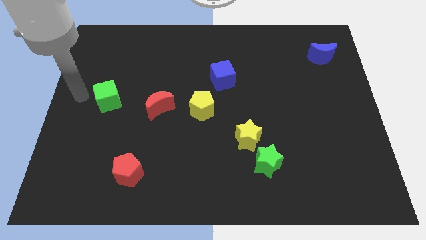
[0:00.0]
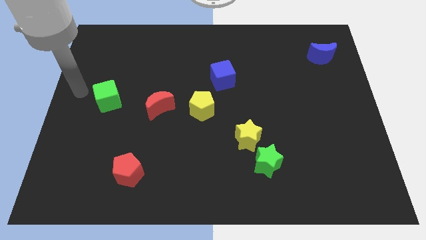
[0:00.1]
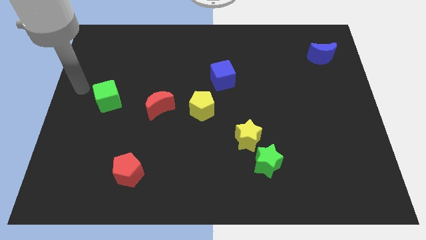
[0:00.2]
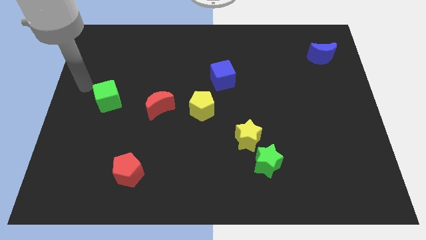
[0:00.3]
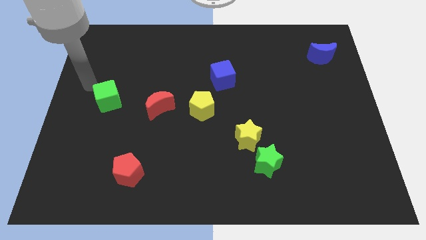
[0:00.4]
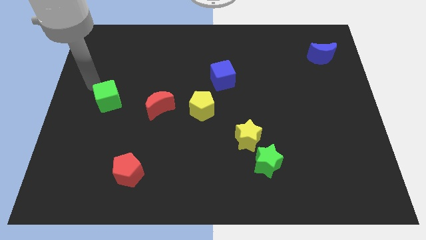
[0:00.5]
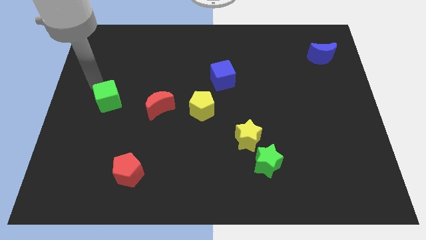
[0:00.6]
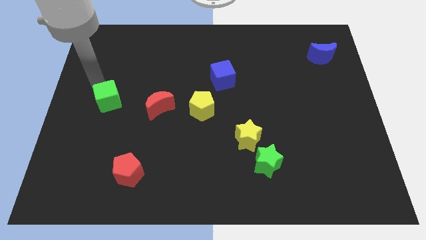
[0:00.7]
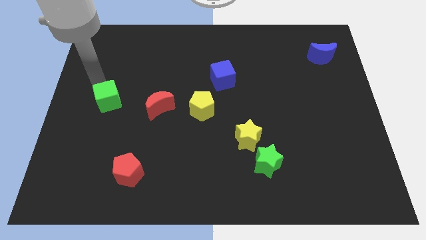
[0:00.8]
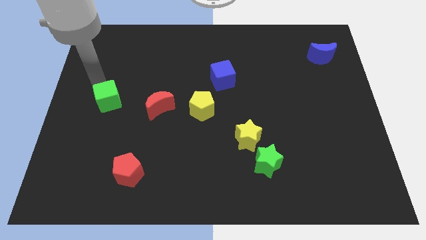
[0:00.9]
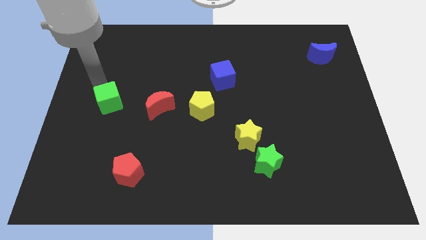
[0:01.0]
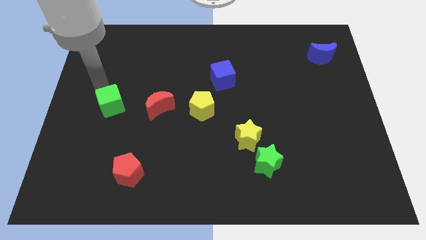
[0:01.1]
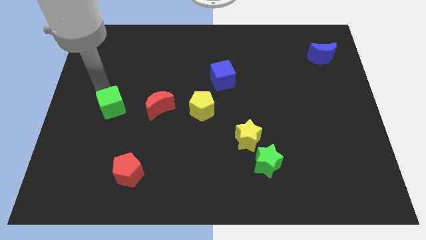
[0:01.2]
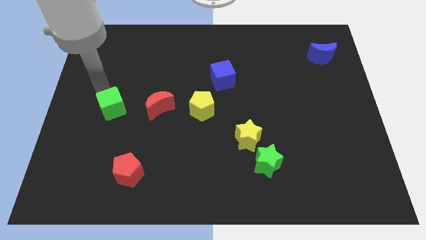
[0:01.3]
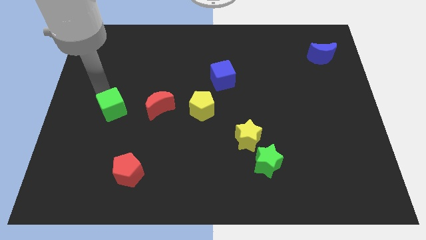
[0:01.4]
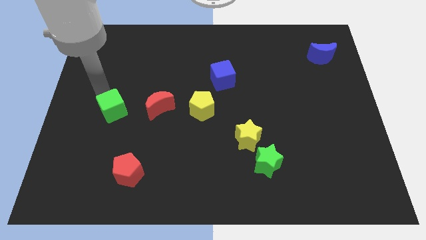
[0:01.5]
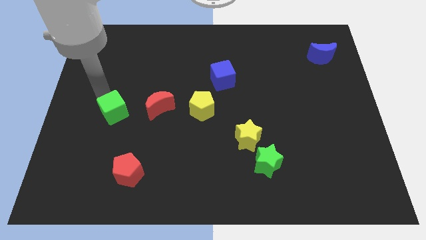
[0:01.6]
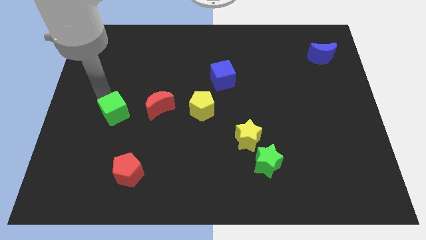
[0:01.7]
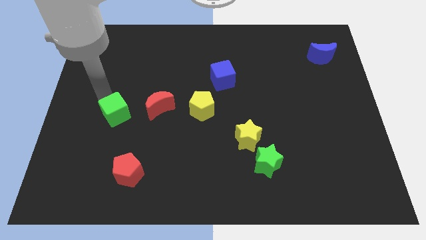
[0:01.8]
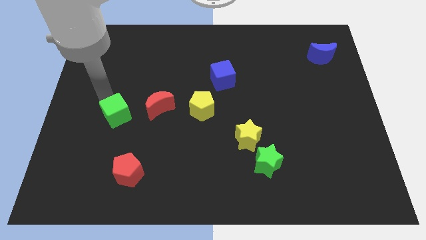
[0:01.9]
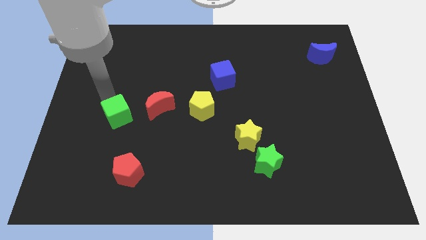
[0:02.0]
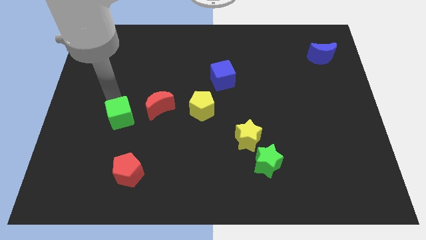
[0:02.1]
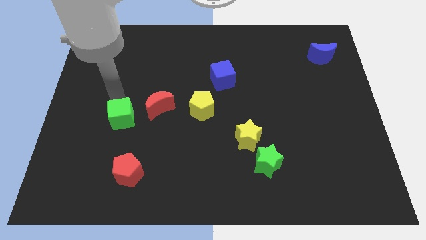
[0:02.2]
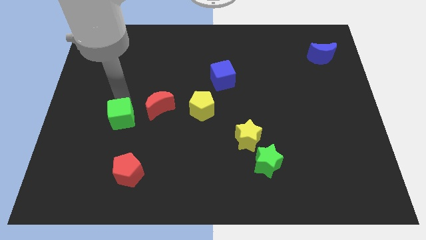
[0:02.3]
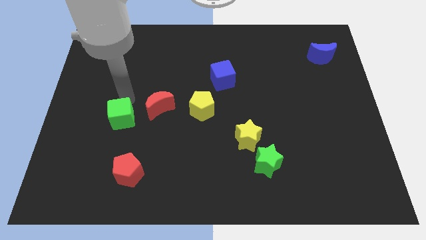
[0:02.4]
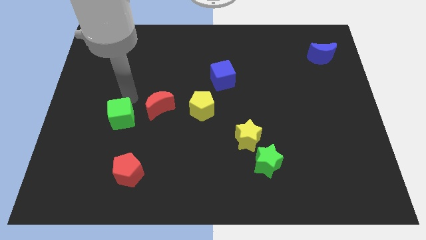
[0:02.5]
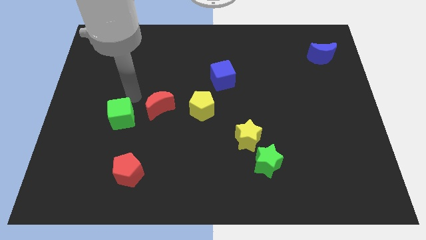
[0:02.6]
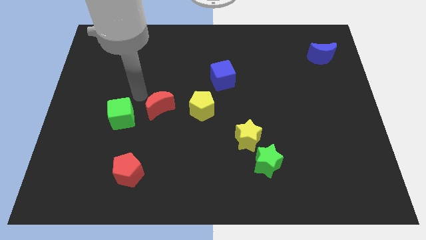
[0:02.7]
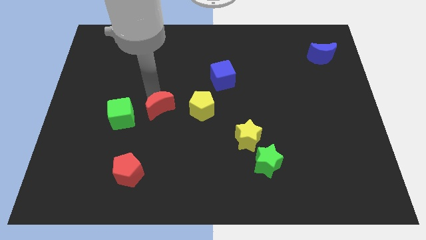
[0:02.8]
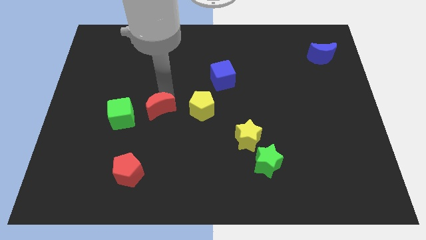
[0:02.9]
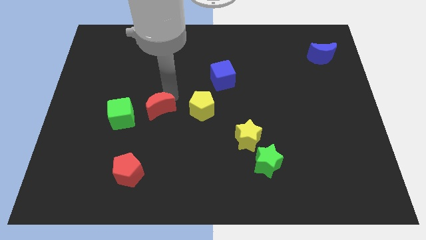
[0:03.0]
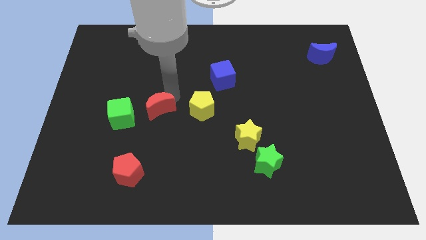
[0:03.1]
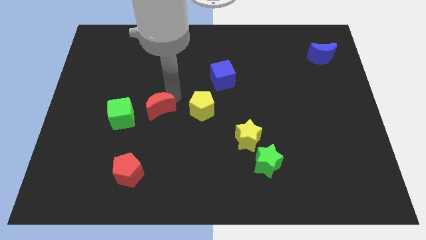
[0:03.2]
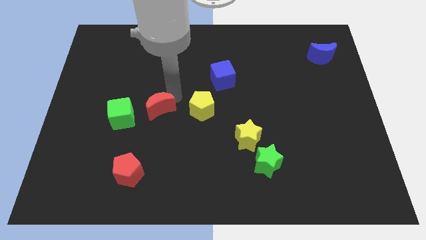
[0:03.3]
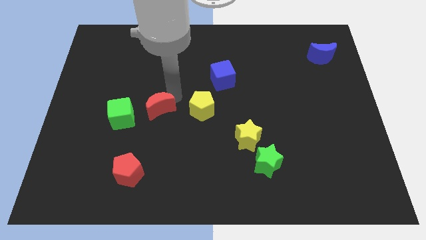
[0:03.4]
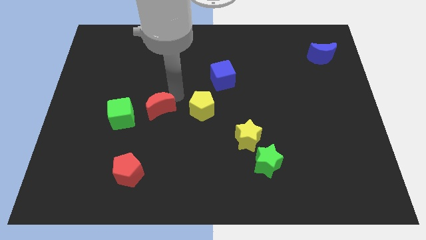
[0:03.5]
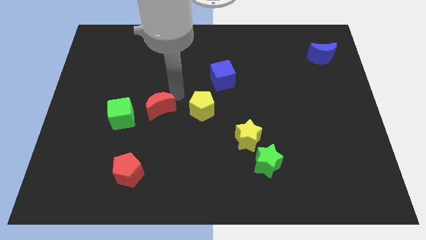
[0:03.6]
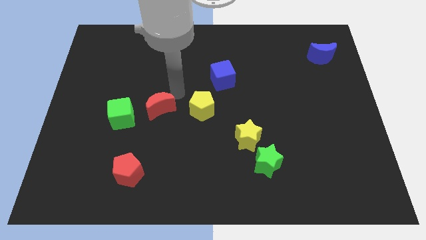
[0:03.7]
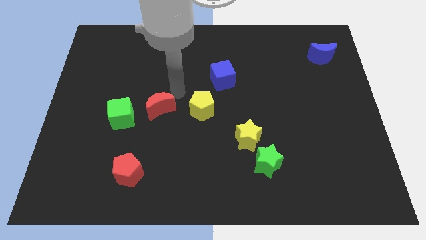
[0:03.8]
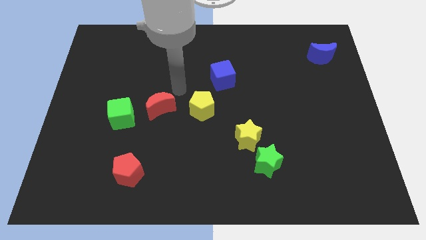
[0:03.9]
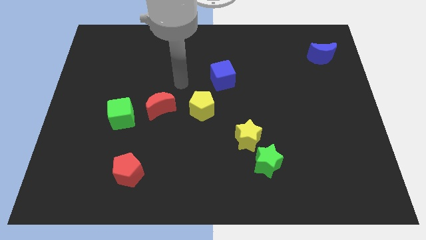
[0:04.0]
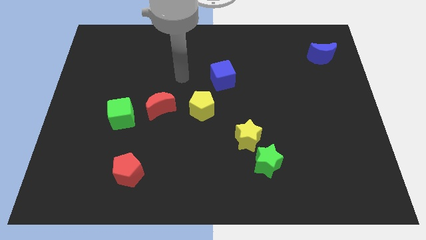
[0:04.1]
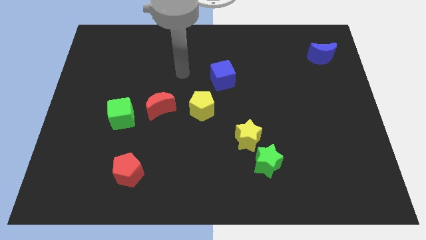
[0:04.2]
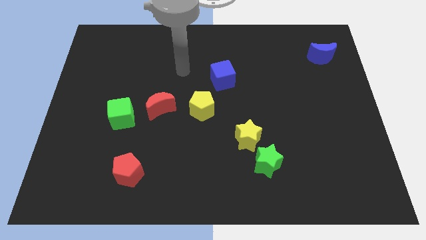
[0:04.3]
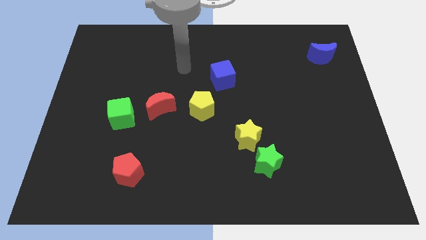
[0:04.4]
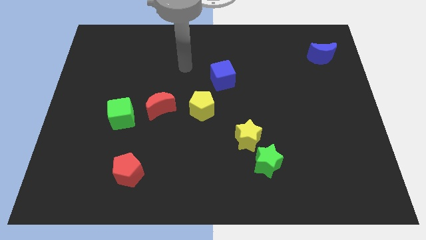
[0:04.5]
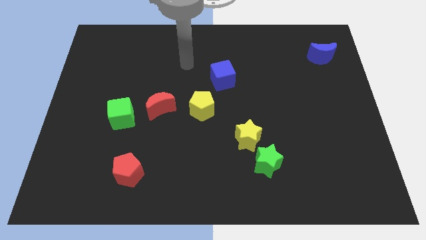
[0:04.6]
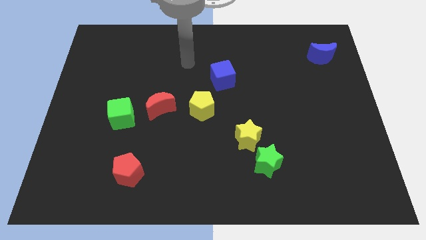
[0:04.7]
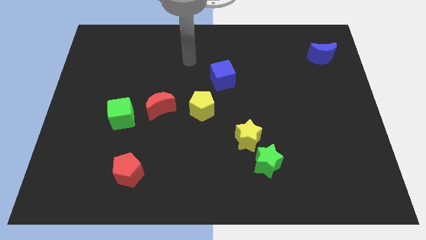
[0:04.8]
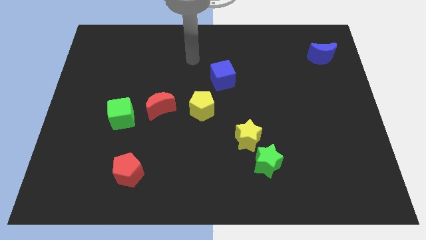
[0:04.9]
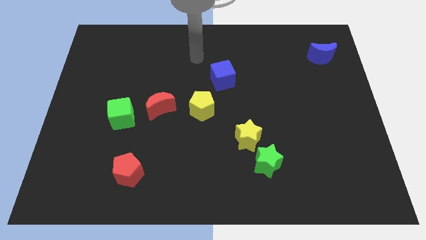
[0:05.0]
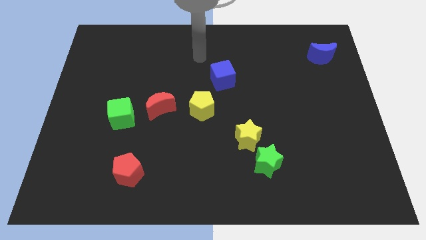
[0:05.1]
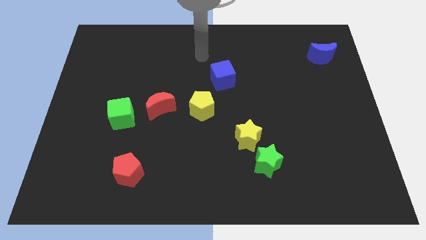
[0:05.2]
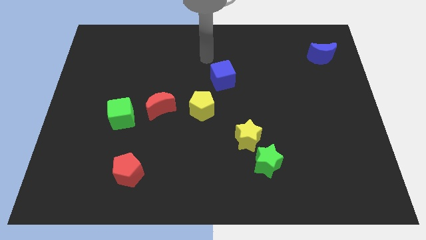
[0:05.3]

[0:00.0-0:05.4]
place the green cube to the left of the red crescent

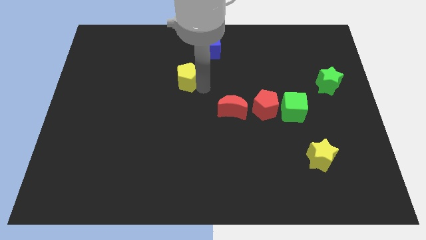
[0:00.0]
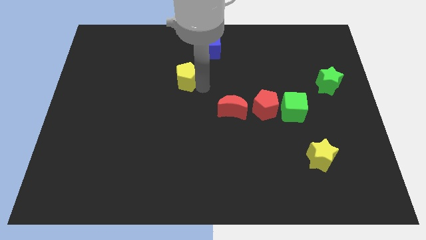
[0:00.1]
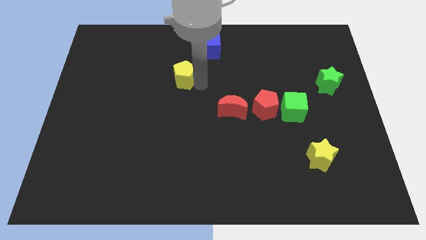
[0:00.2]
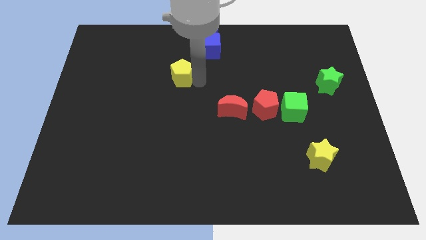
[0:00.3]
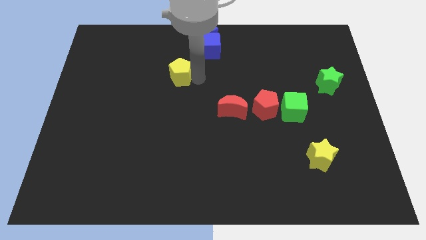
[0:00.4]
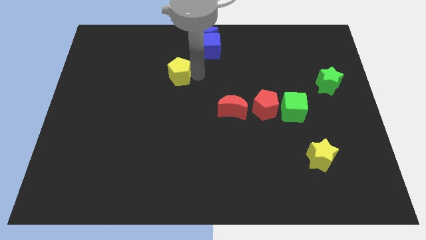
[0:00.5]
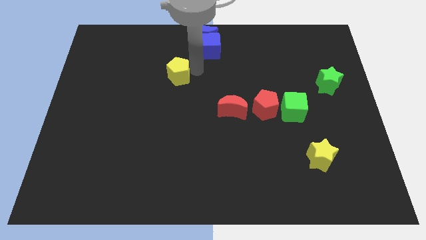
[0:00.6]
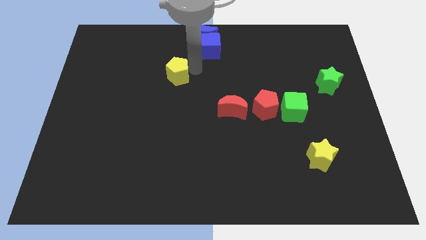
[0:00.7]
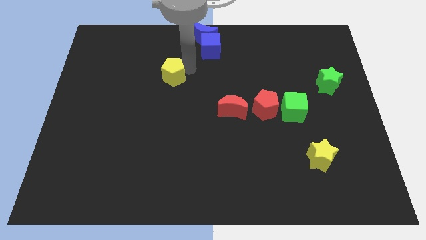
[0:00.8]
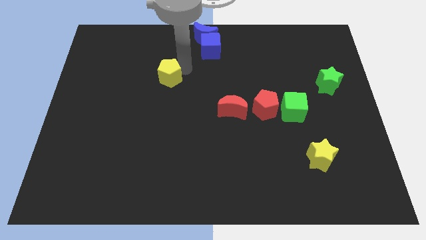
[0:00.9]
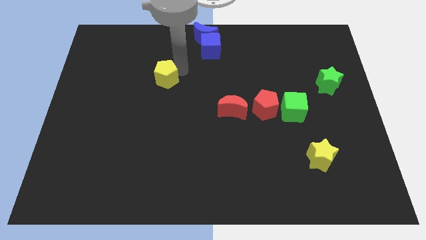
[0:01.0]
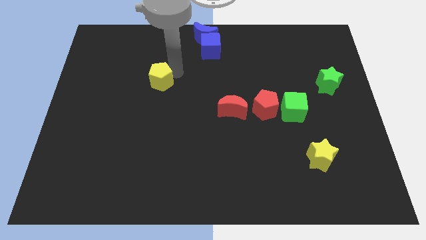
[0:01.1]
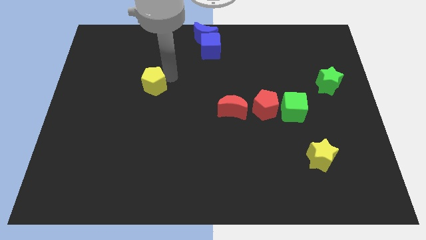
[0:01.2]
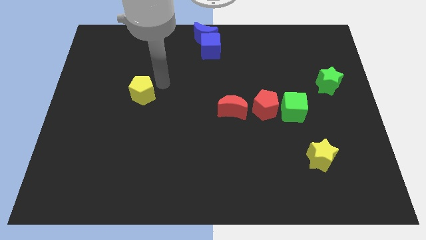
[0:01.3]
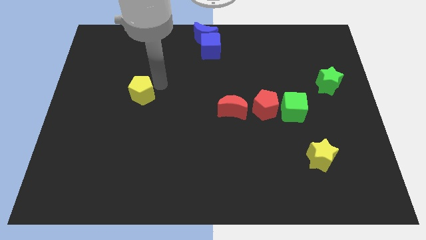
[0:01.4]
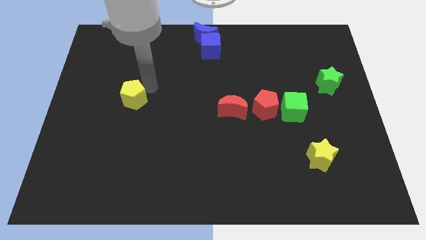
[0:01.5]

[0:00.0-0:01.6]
push the yellow pentagon to the left

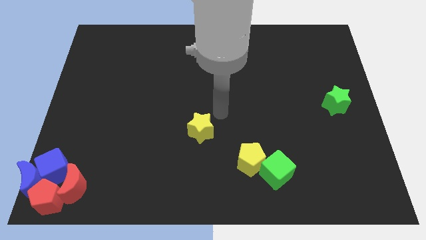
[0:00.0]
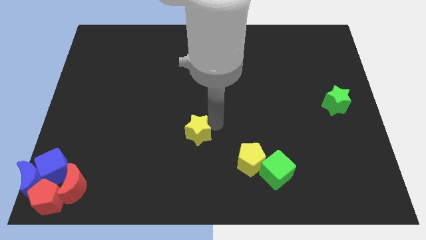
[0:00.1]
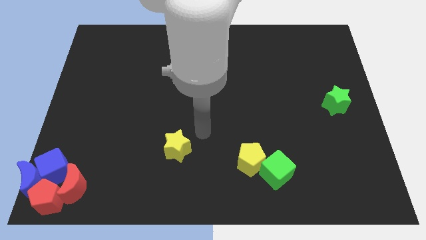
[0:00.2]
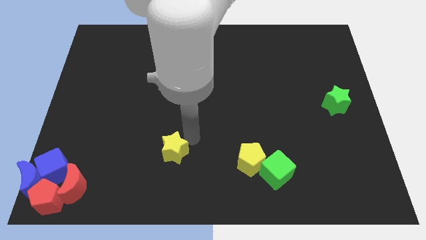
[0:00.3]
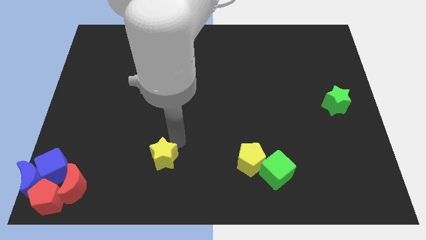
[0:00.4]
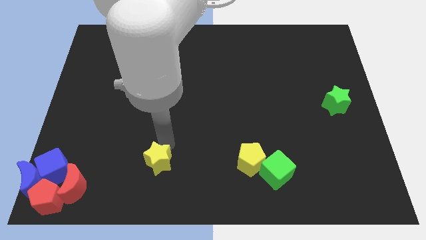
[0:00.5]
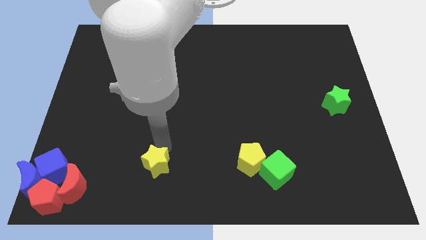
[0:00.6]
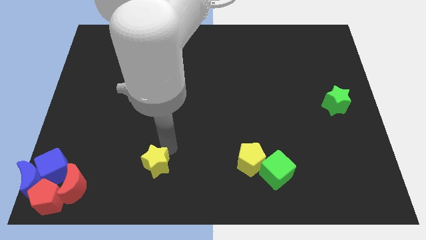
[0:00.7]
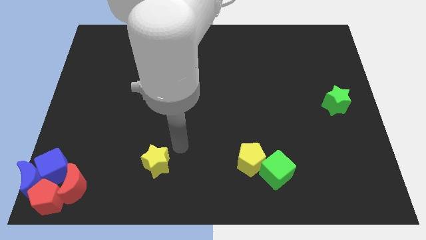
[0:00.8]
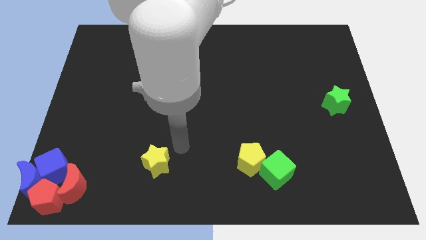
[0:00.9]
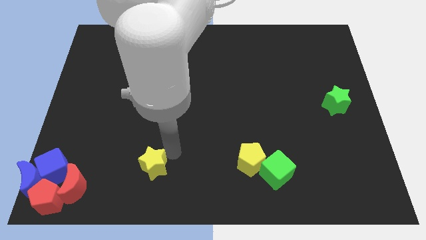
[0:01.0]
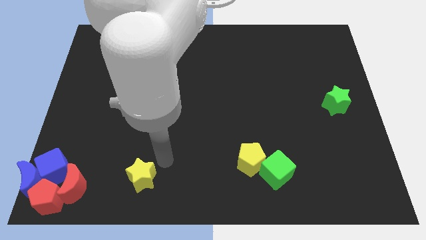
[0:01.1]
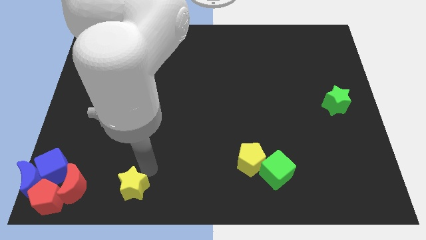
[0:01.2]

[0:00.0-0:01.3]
push the yellow star to the bottom side of the board

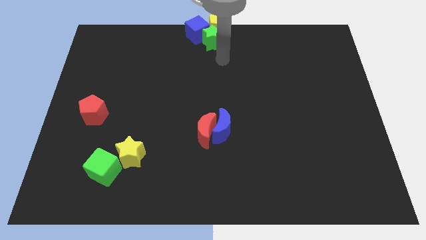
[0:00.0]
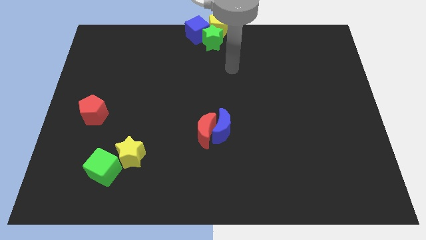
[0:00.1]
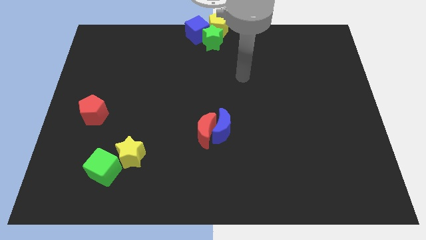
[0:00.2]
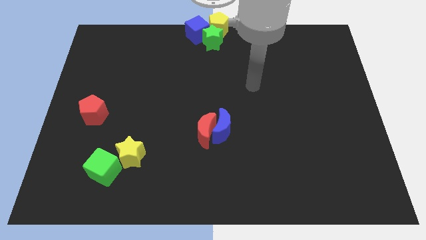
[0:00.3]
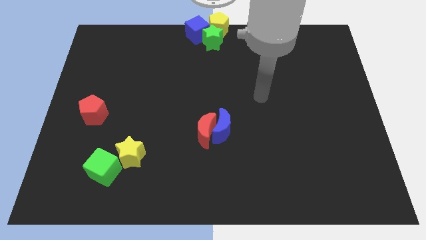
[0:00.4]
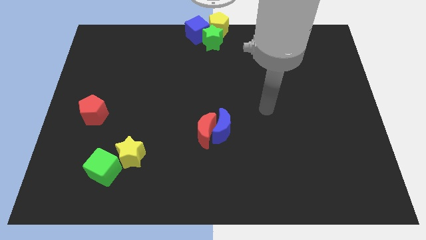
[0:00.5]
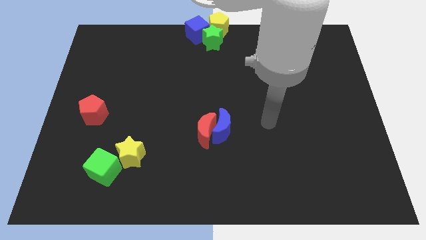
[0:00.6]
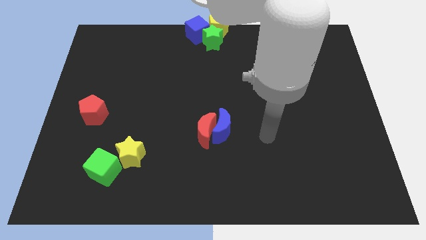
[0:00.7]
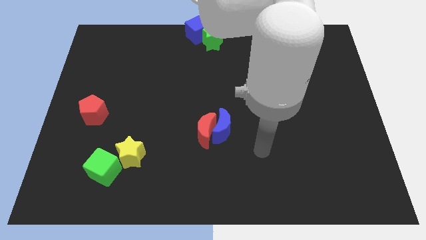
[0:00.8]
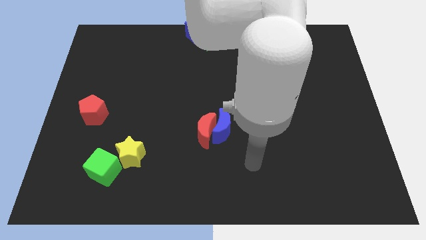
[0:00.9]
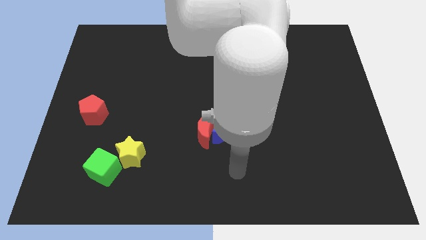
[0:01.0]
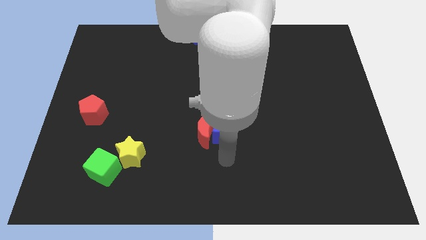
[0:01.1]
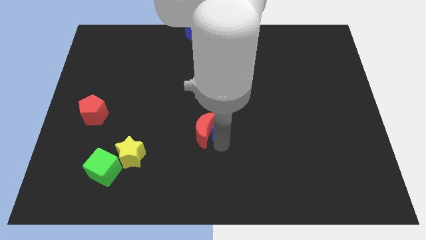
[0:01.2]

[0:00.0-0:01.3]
place your arm to the bottom of the blue moon
